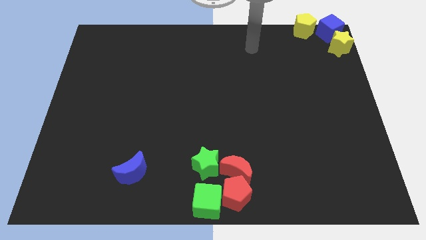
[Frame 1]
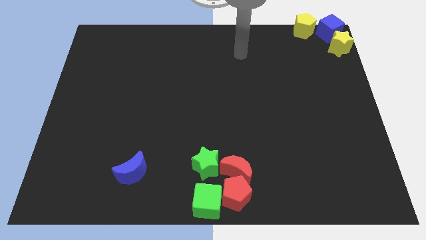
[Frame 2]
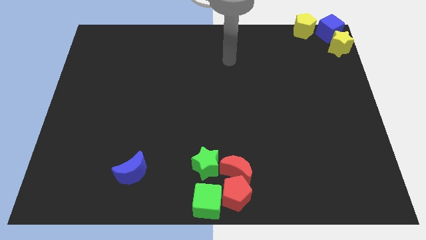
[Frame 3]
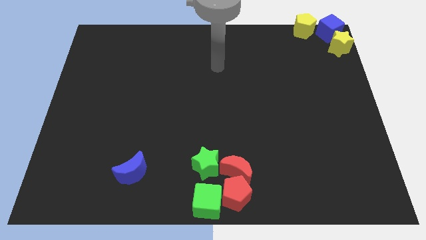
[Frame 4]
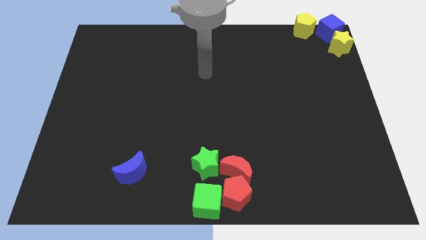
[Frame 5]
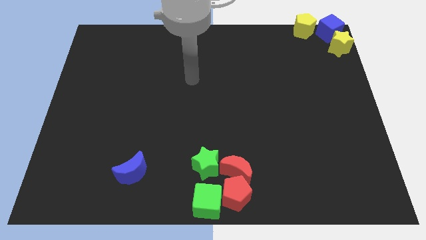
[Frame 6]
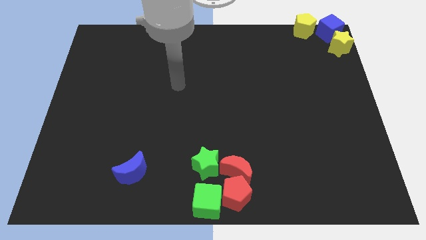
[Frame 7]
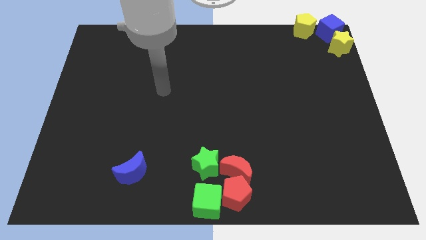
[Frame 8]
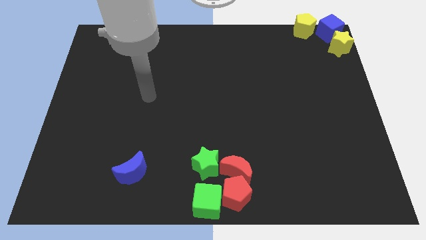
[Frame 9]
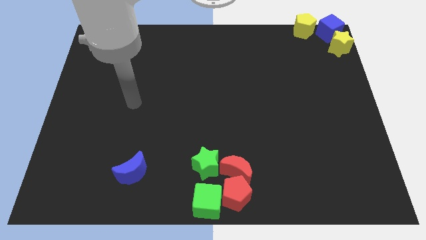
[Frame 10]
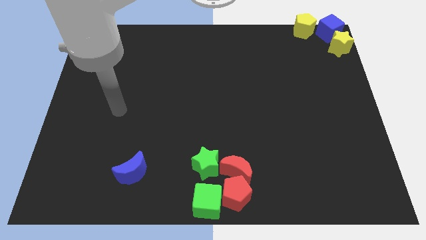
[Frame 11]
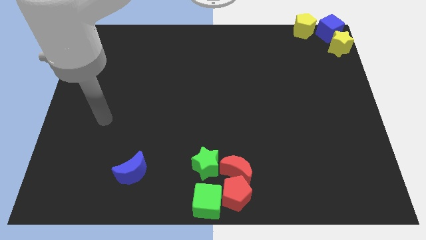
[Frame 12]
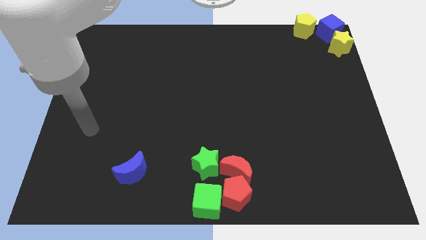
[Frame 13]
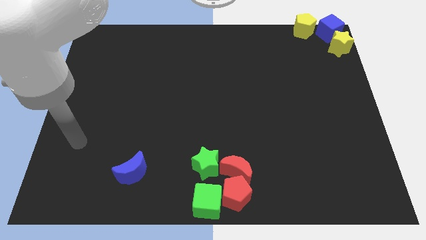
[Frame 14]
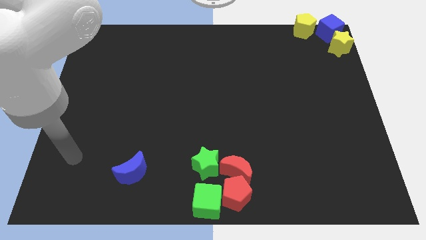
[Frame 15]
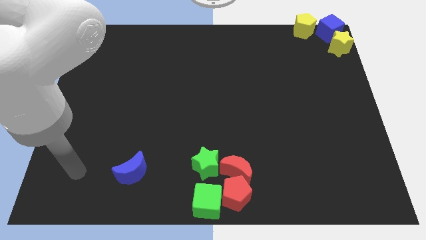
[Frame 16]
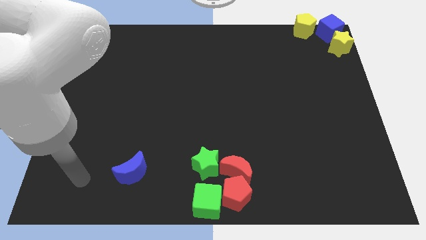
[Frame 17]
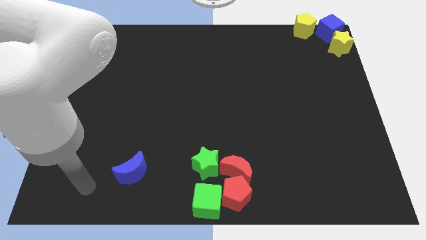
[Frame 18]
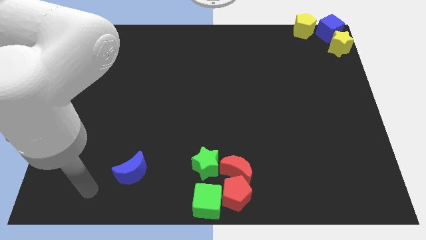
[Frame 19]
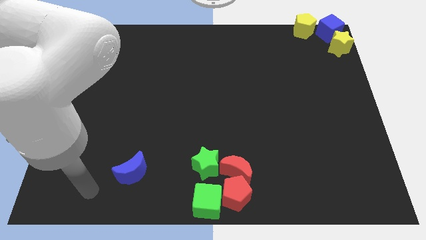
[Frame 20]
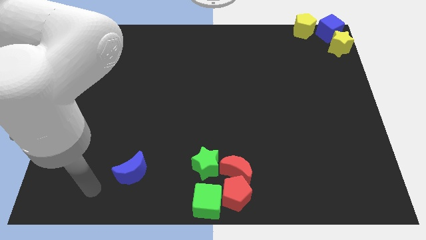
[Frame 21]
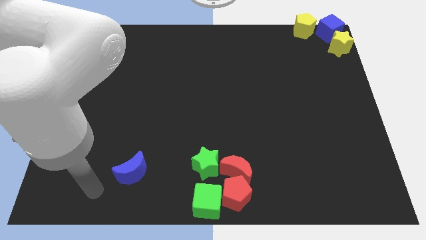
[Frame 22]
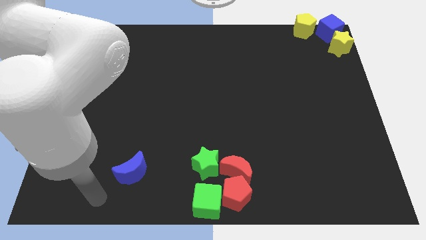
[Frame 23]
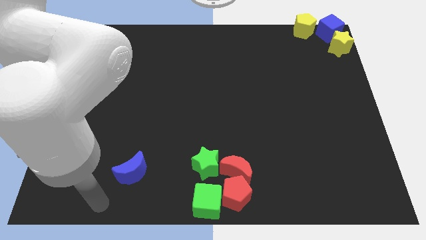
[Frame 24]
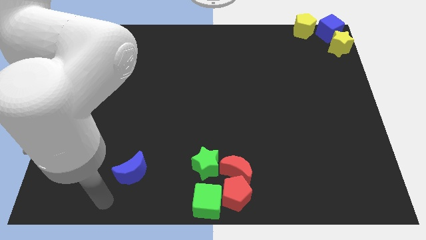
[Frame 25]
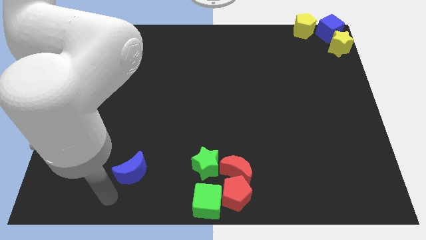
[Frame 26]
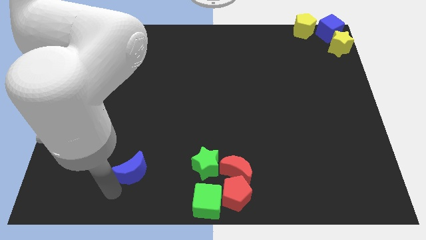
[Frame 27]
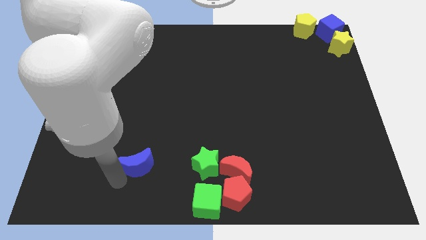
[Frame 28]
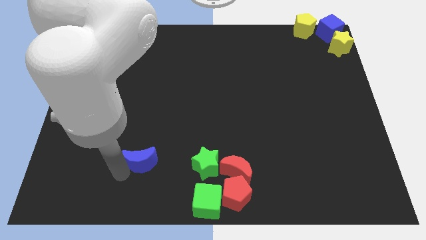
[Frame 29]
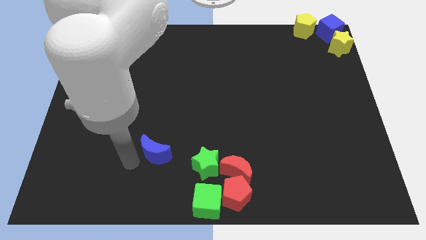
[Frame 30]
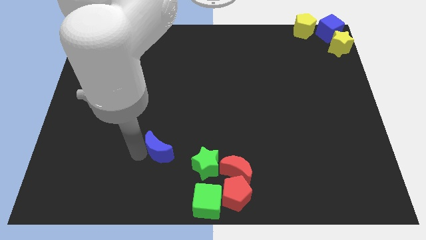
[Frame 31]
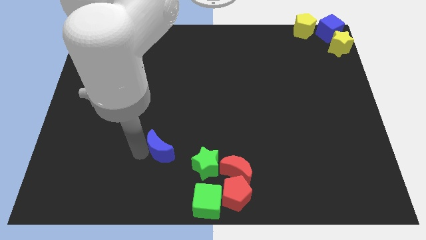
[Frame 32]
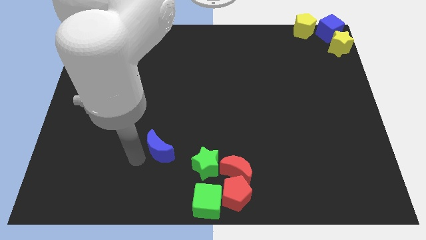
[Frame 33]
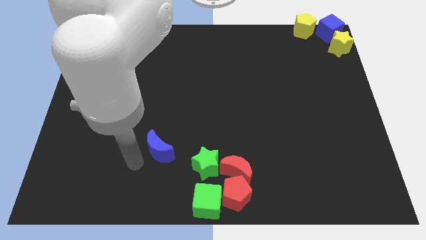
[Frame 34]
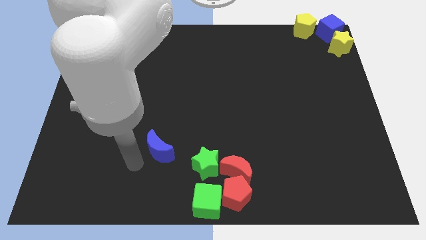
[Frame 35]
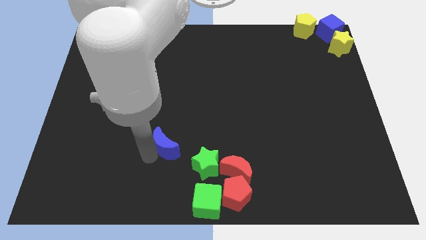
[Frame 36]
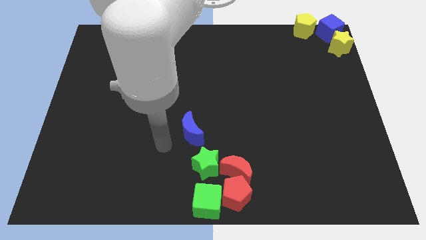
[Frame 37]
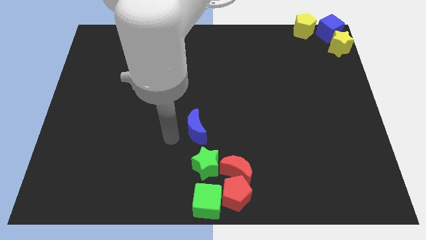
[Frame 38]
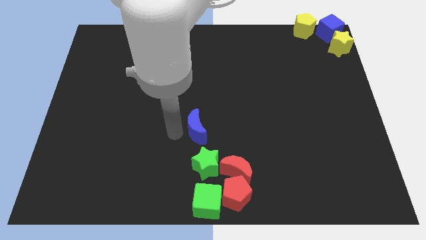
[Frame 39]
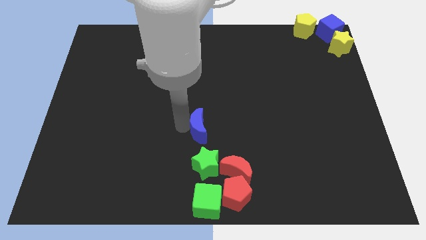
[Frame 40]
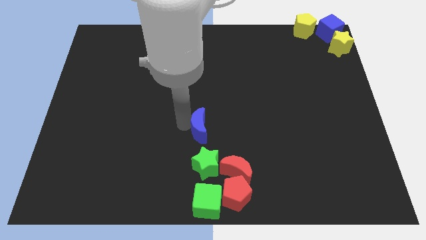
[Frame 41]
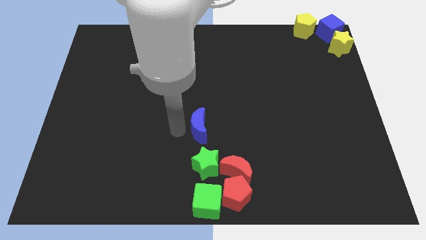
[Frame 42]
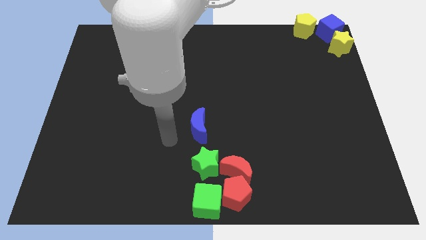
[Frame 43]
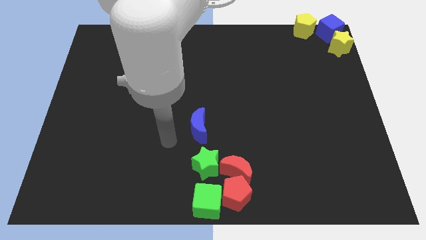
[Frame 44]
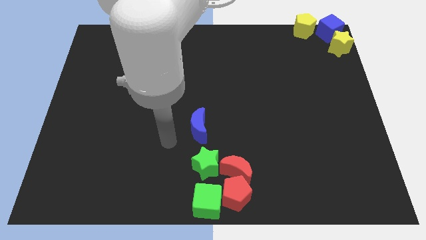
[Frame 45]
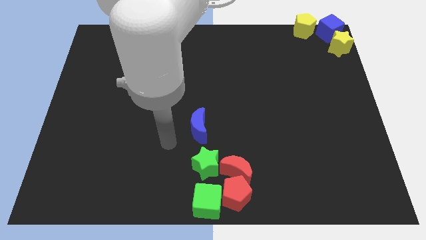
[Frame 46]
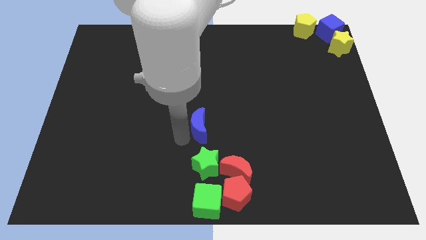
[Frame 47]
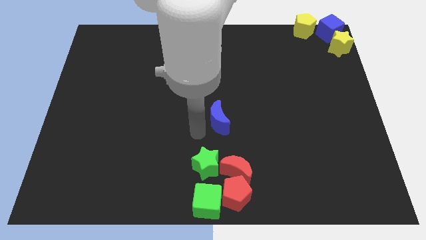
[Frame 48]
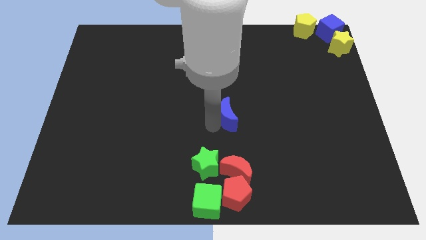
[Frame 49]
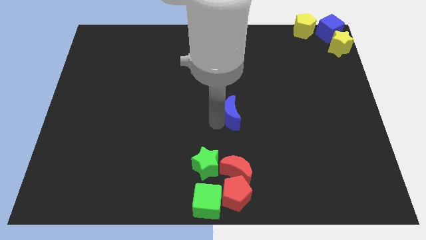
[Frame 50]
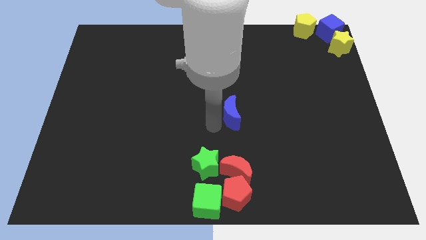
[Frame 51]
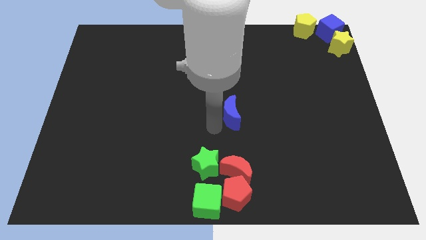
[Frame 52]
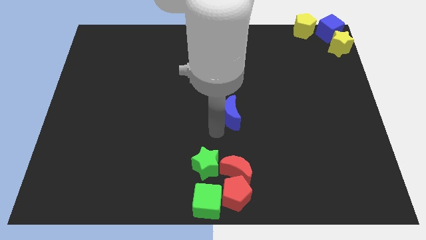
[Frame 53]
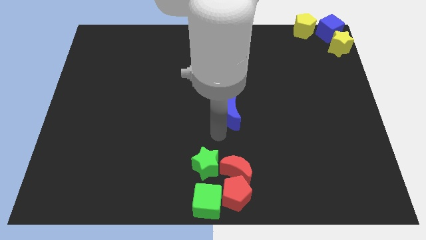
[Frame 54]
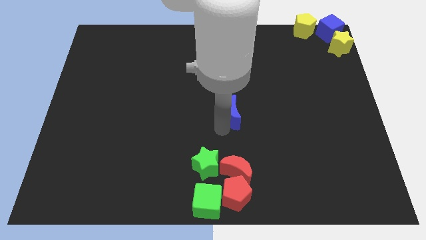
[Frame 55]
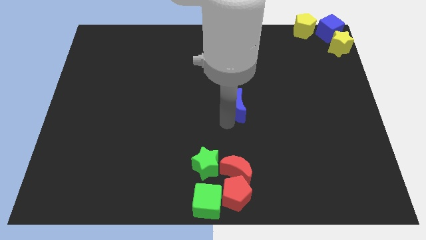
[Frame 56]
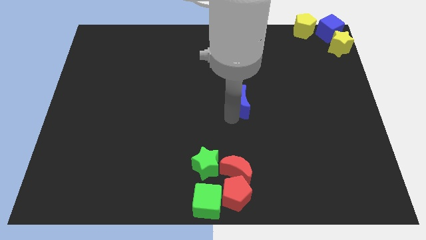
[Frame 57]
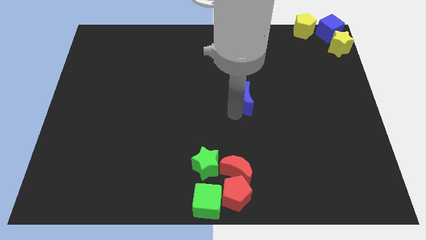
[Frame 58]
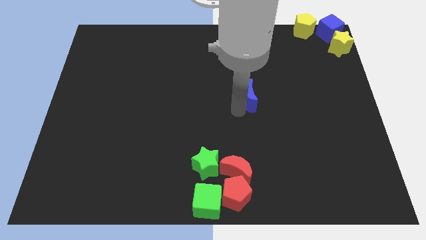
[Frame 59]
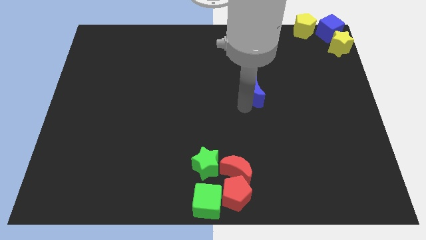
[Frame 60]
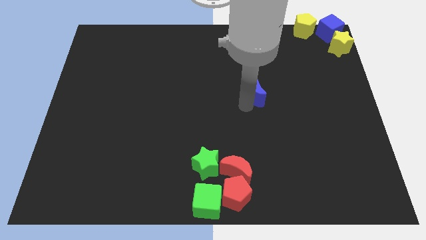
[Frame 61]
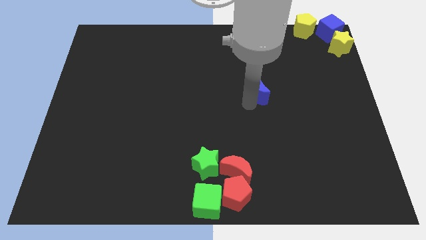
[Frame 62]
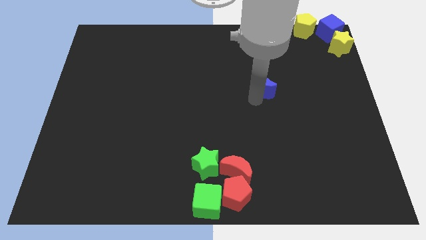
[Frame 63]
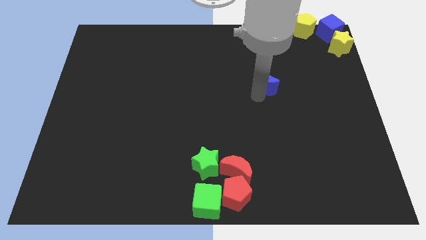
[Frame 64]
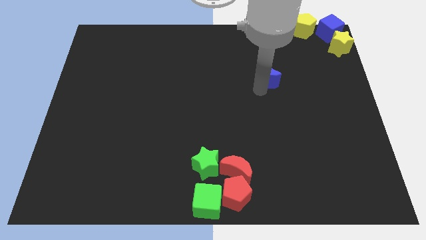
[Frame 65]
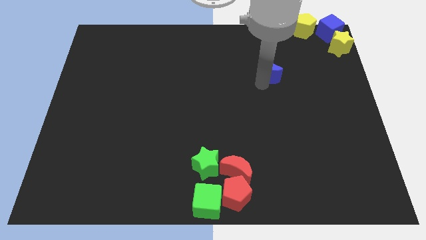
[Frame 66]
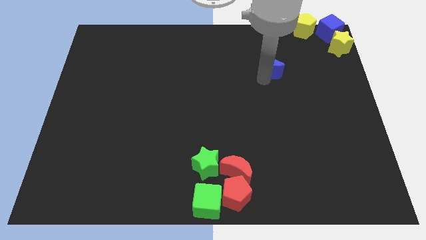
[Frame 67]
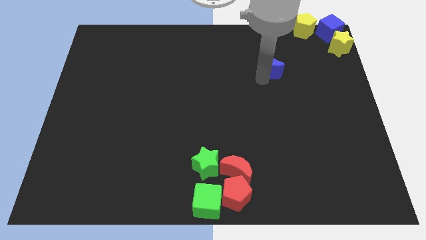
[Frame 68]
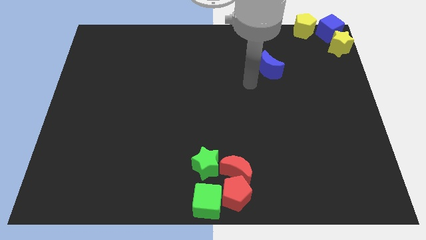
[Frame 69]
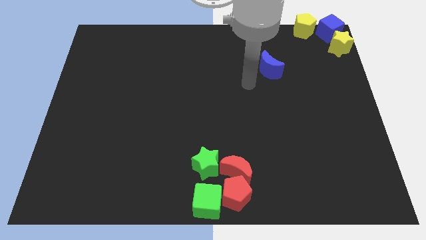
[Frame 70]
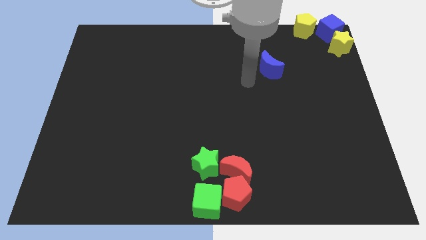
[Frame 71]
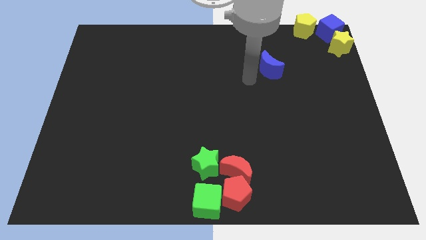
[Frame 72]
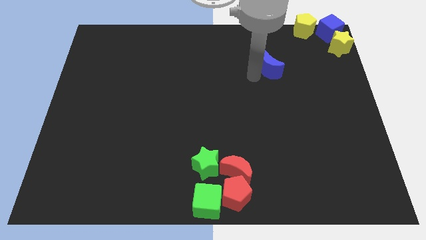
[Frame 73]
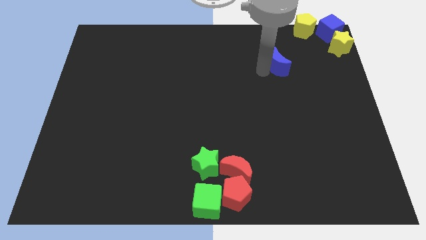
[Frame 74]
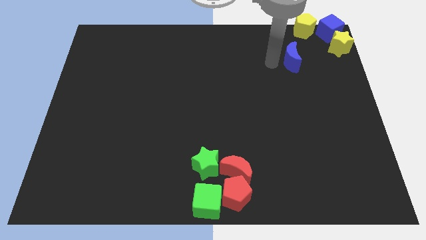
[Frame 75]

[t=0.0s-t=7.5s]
push the blue moon towards the top right corner

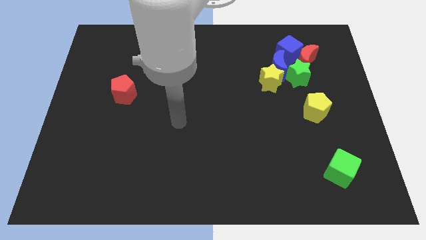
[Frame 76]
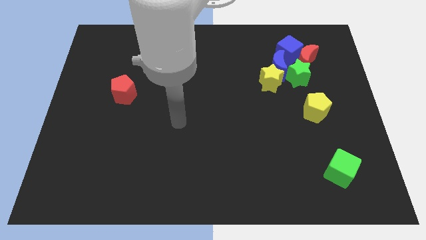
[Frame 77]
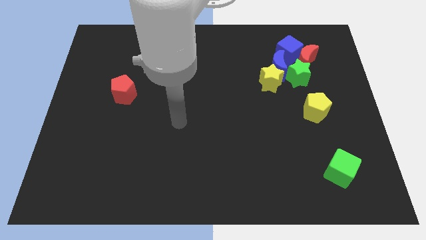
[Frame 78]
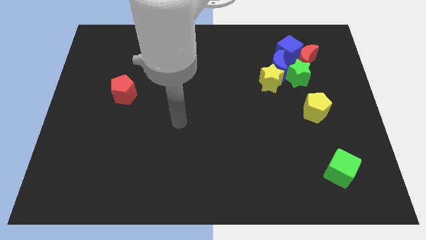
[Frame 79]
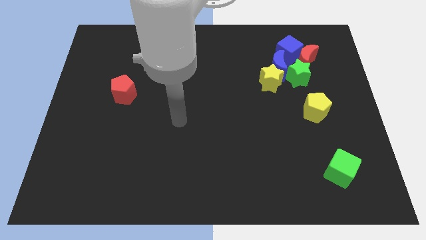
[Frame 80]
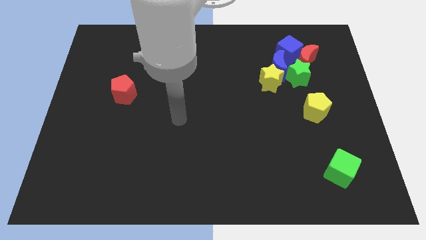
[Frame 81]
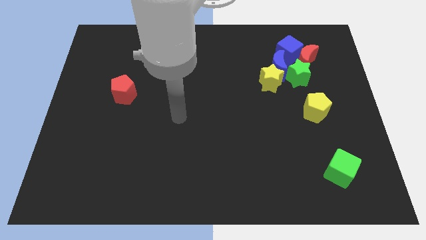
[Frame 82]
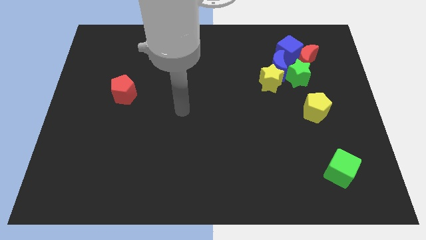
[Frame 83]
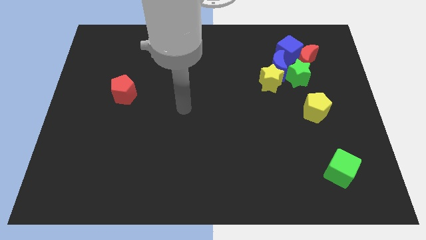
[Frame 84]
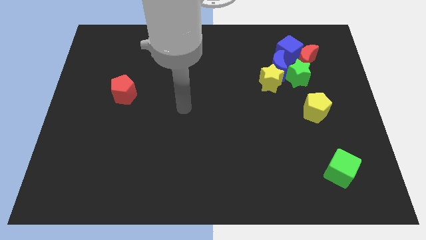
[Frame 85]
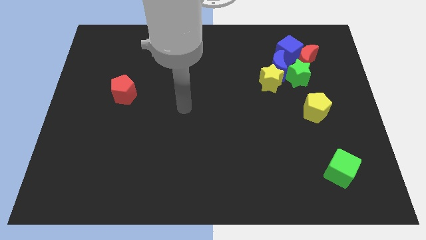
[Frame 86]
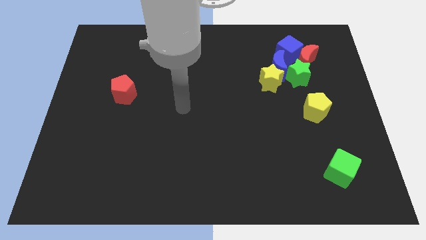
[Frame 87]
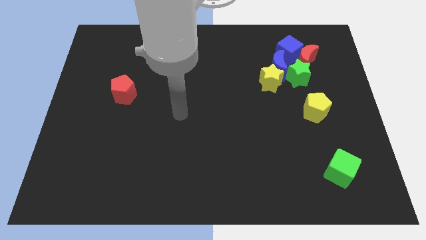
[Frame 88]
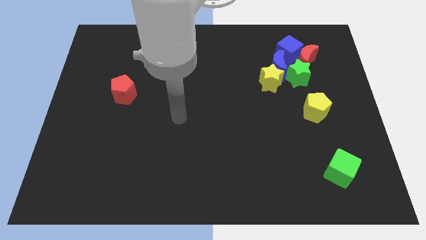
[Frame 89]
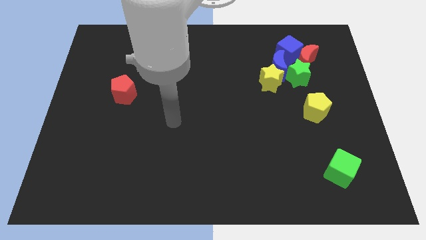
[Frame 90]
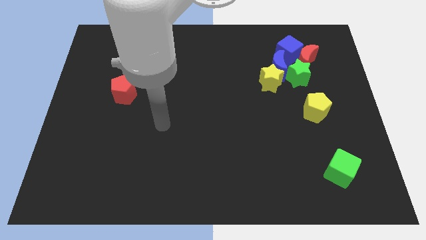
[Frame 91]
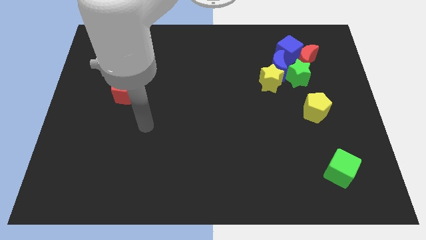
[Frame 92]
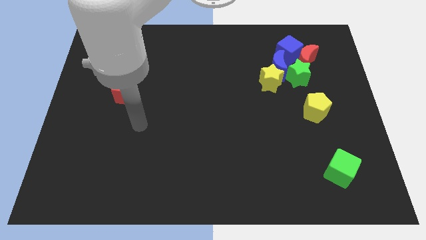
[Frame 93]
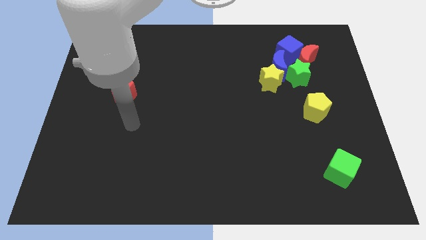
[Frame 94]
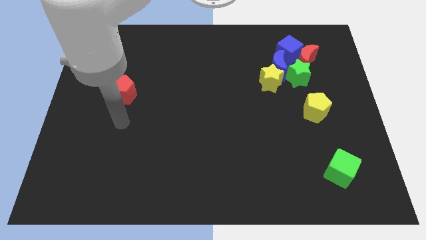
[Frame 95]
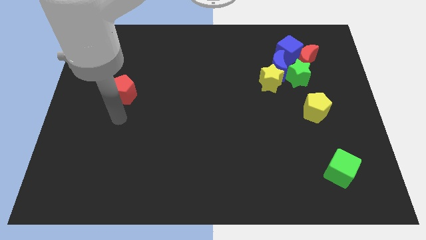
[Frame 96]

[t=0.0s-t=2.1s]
point your arm to the bottom side of the red pentagon
